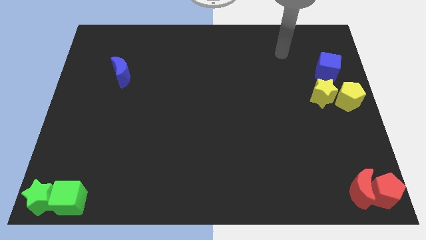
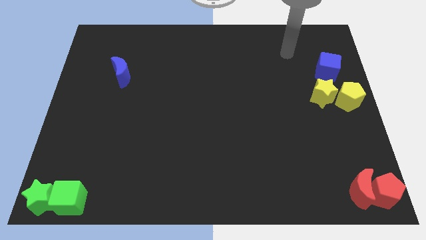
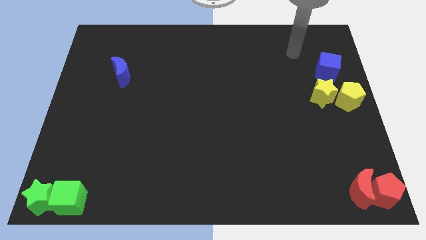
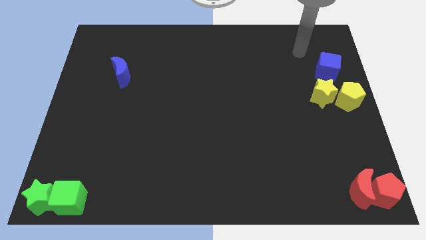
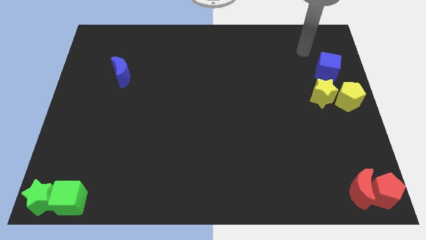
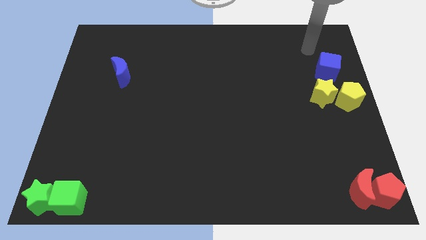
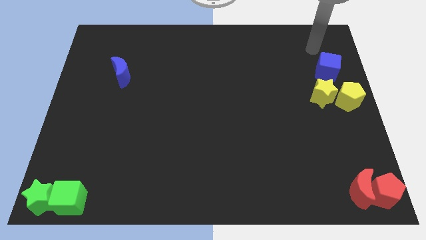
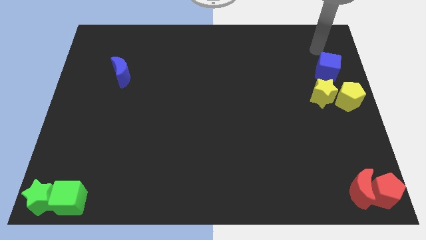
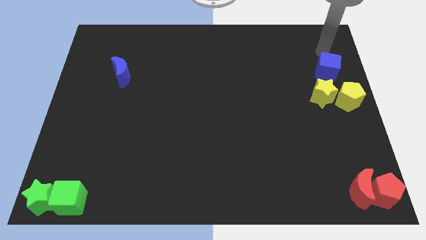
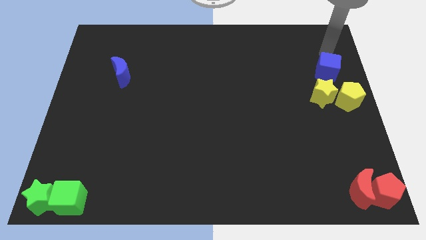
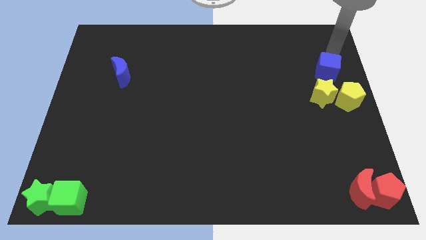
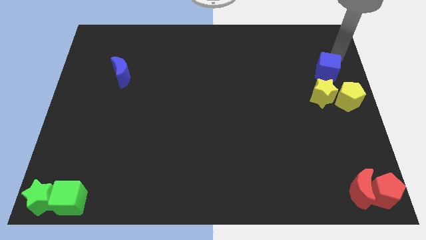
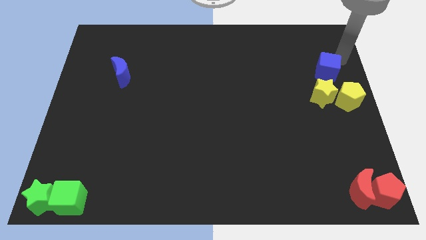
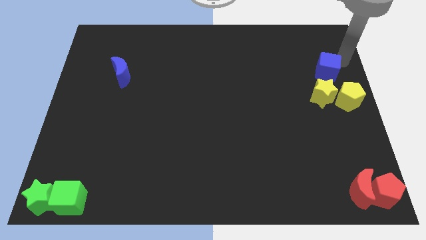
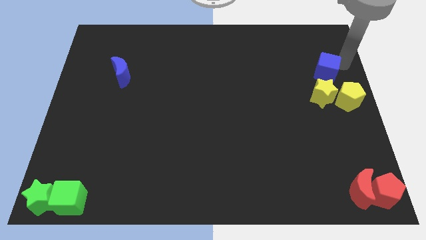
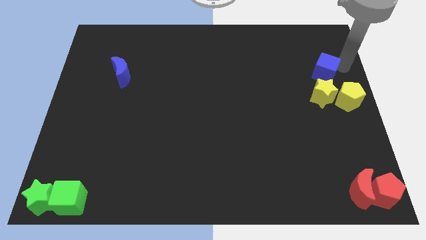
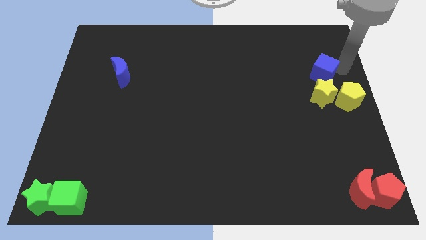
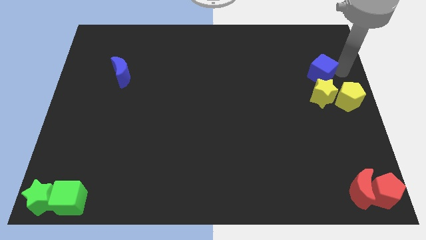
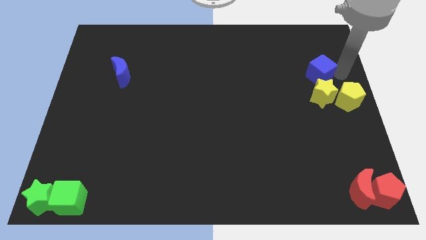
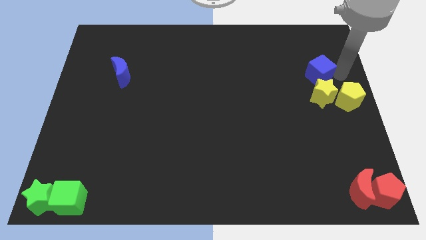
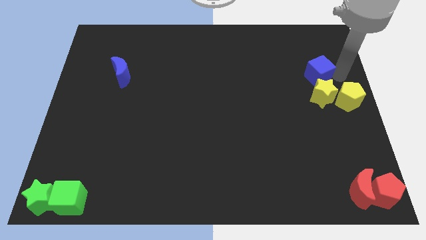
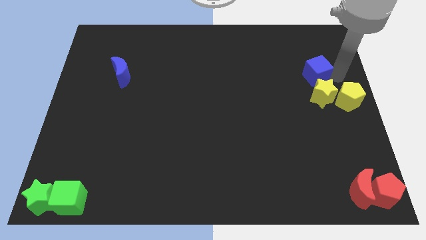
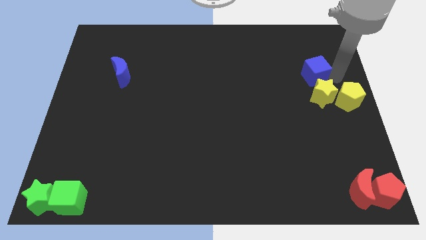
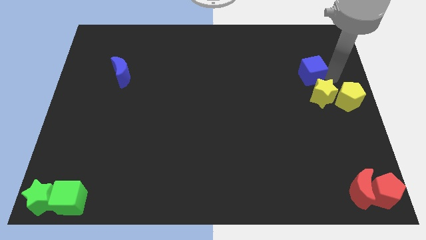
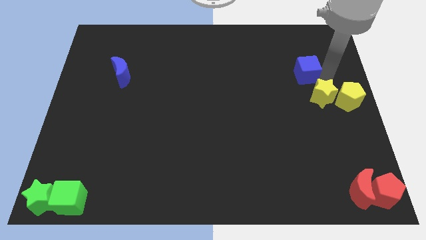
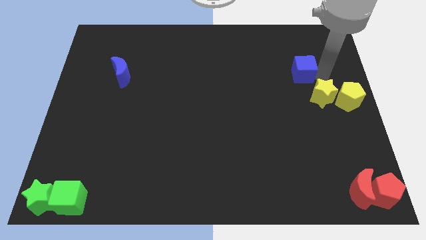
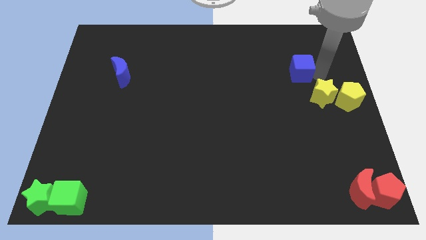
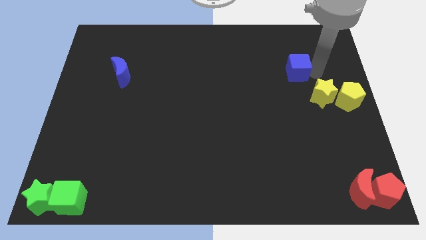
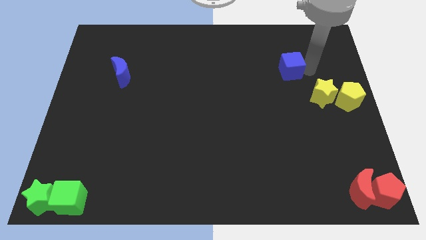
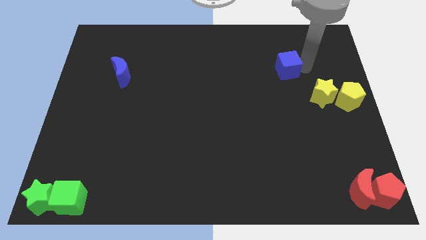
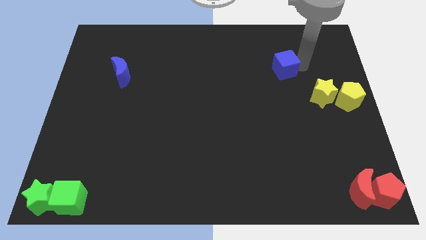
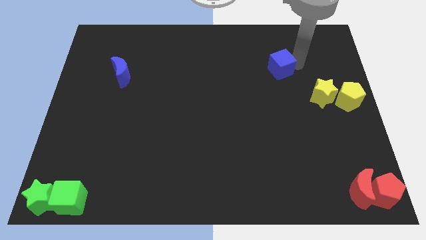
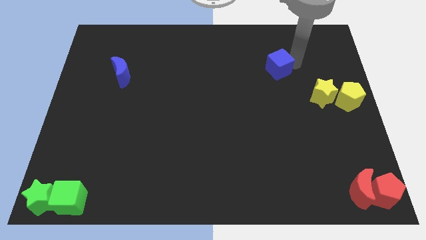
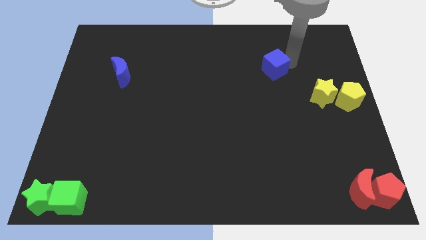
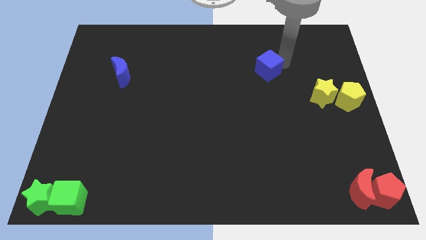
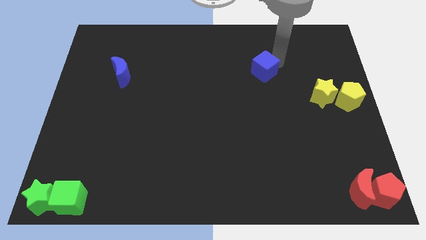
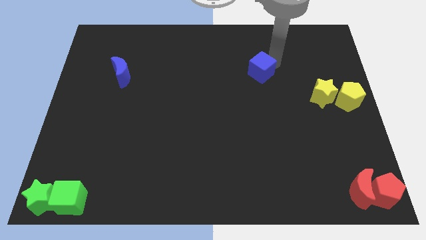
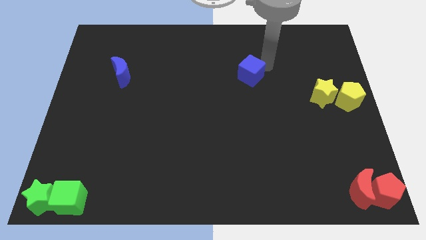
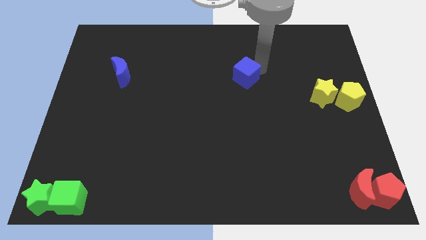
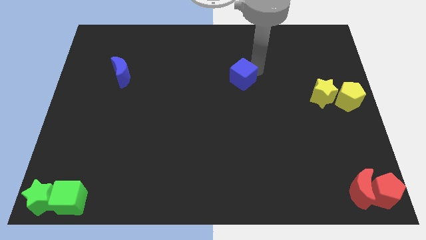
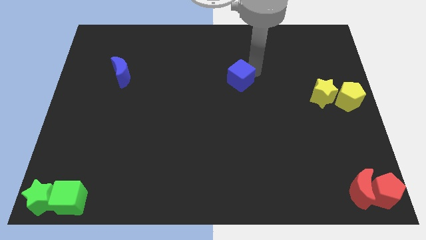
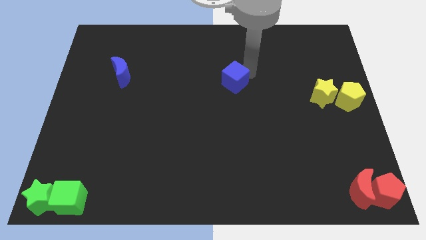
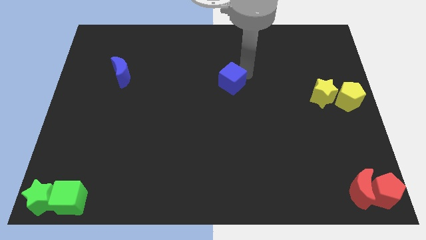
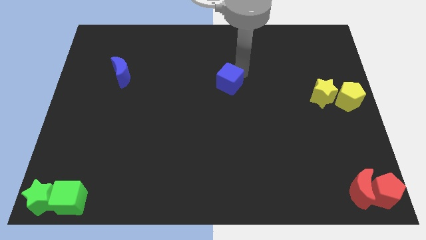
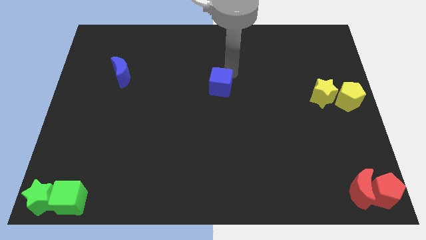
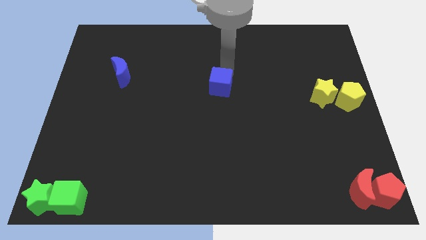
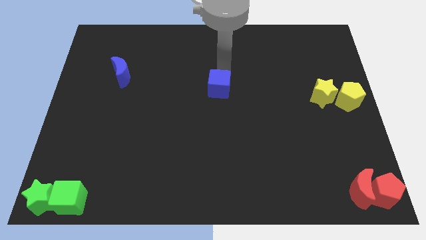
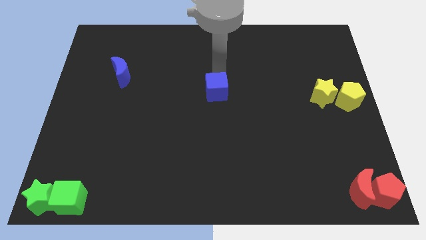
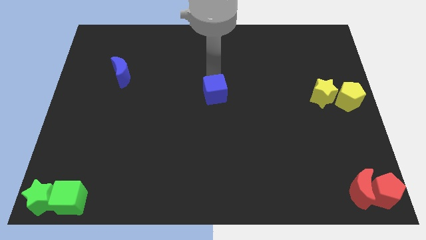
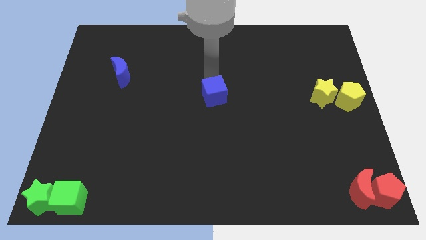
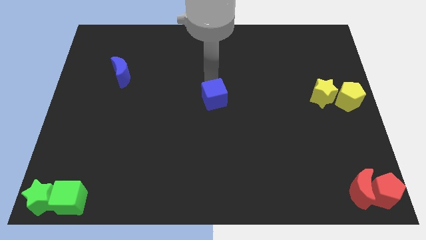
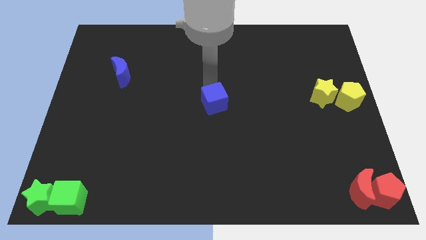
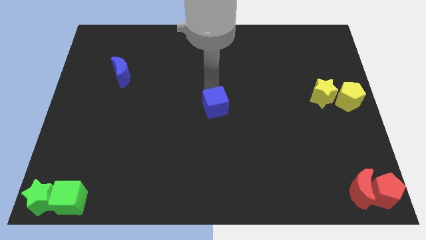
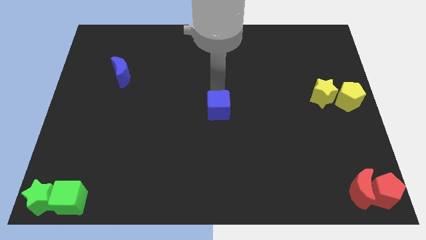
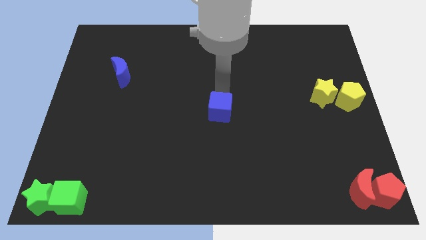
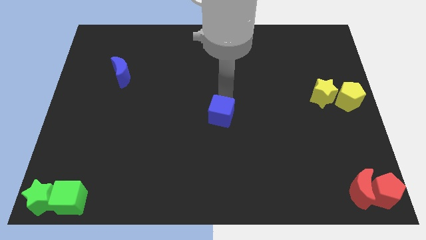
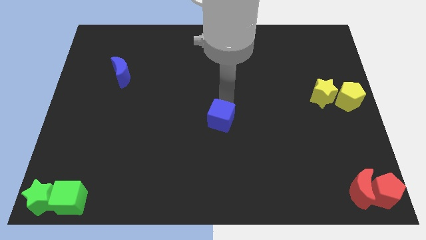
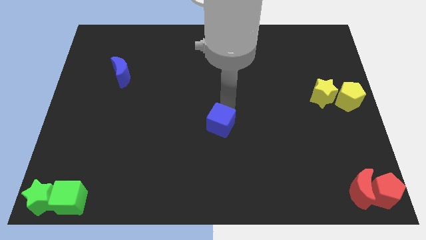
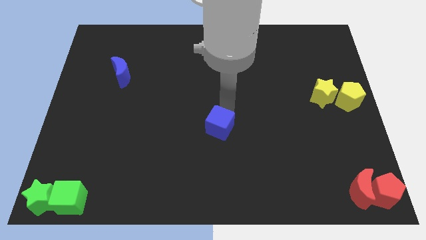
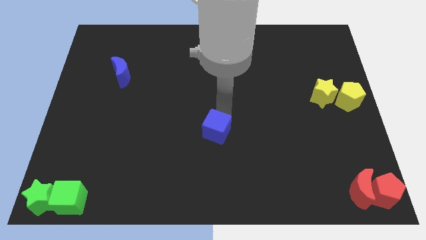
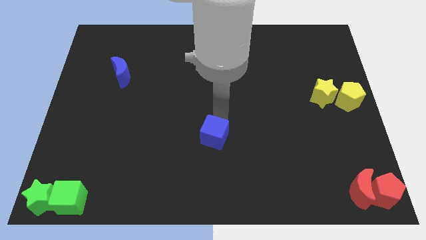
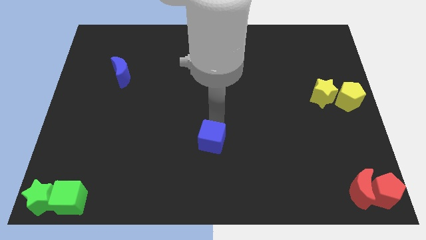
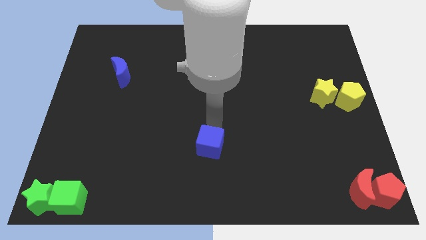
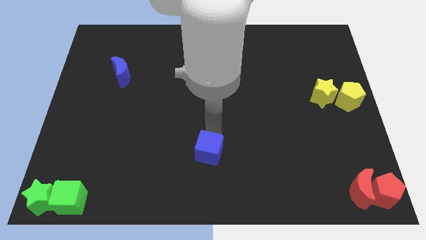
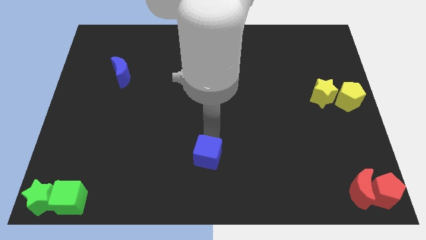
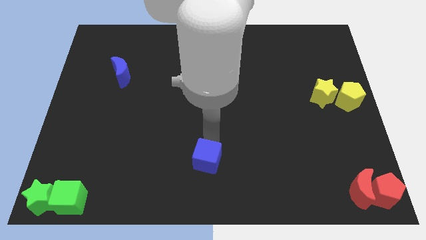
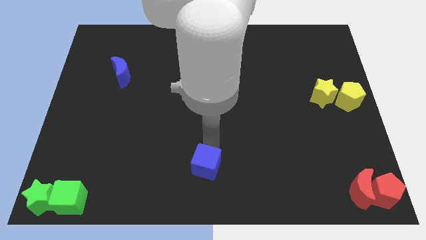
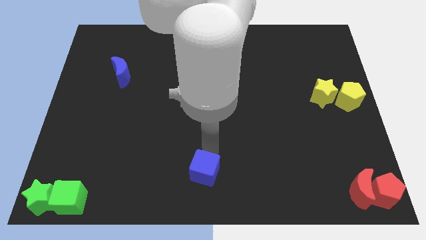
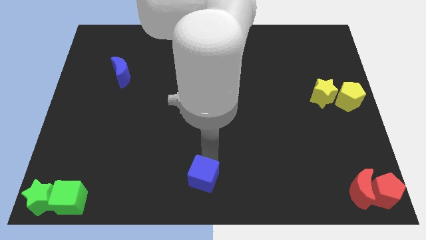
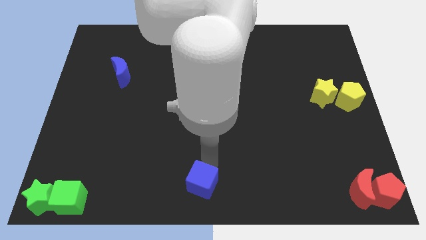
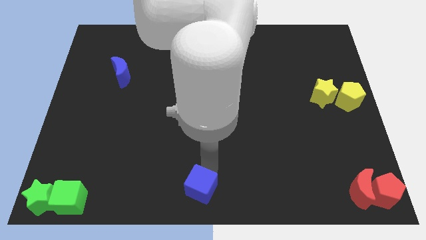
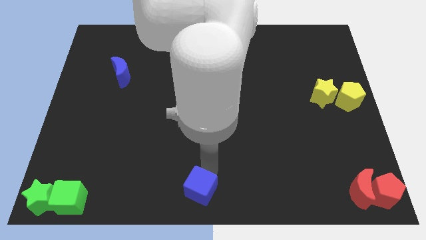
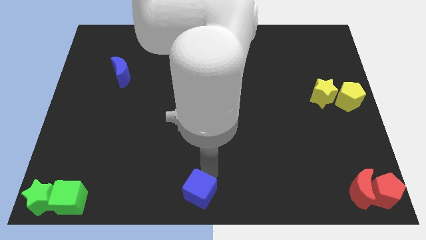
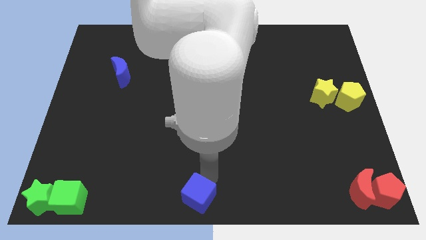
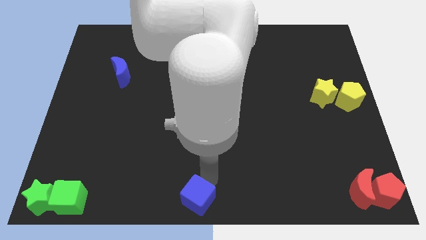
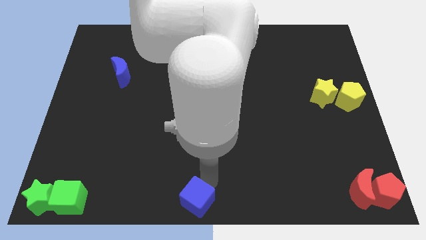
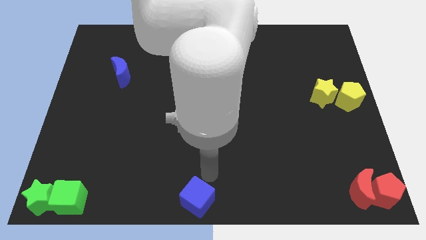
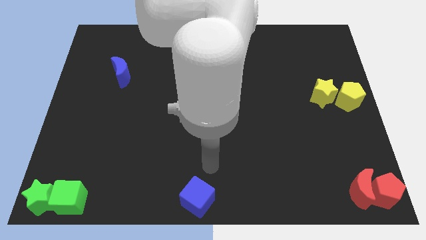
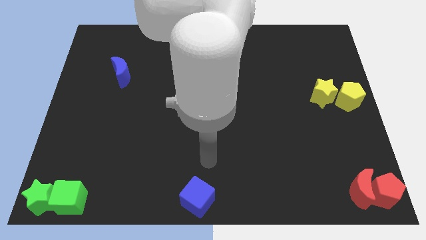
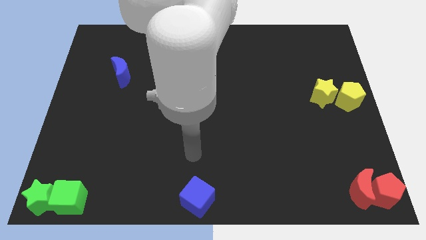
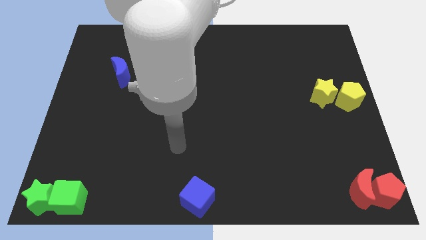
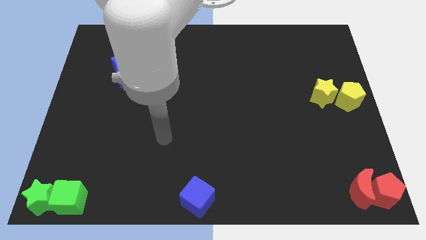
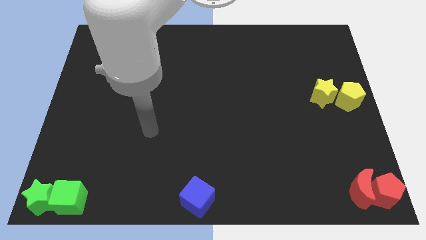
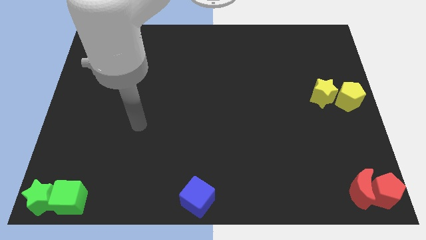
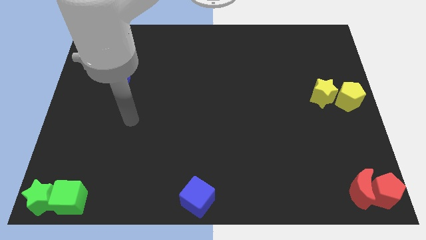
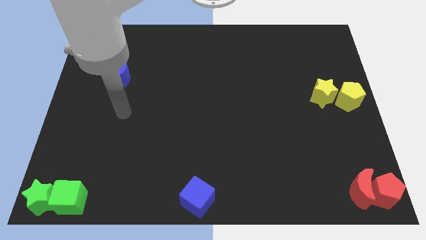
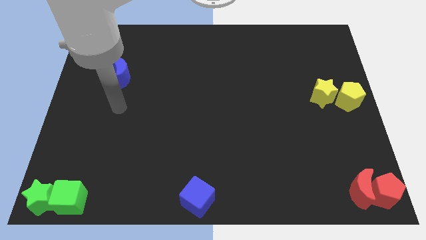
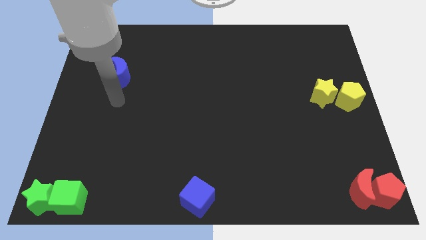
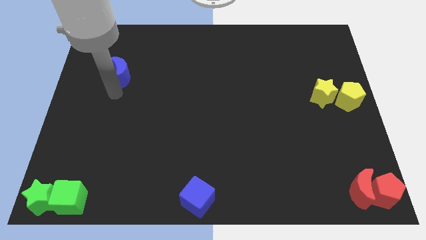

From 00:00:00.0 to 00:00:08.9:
place the blue cube at the bottom center
